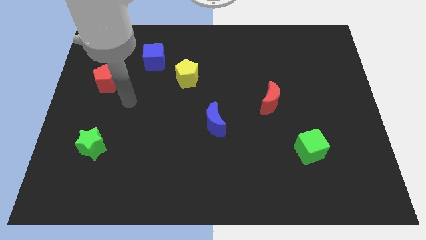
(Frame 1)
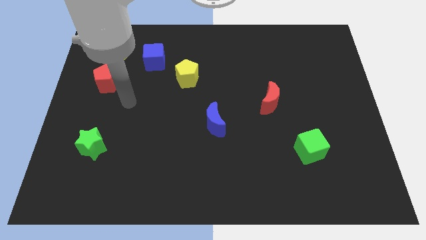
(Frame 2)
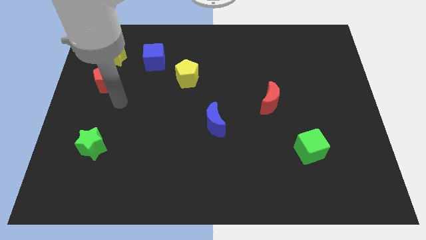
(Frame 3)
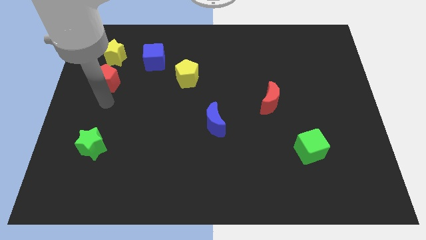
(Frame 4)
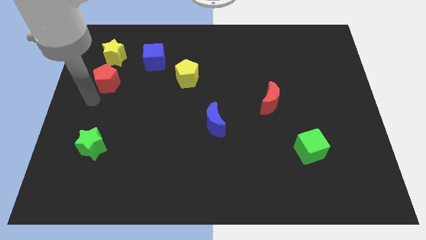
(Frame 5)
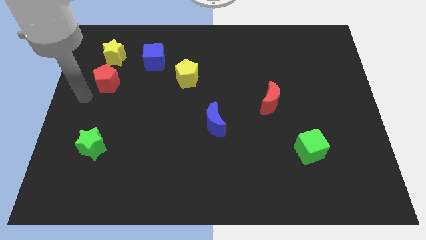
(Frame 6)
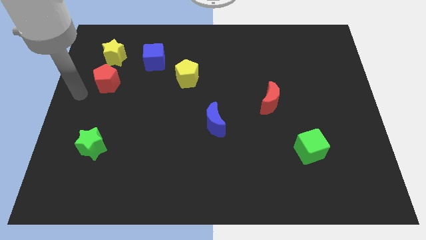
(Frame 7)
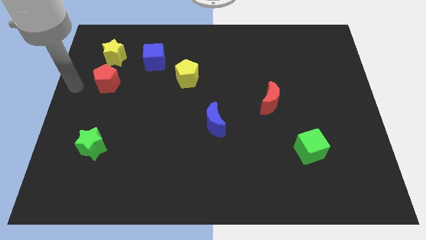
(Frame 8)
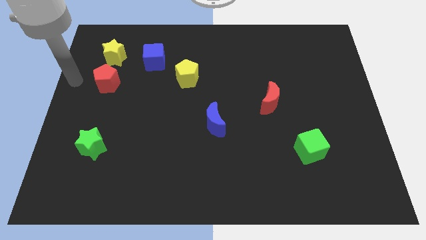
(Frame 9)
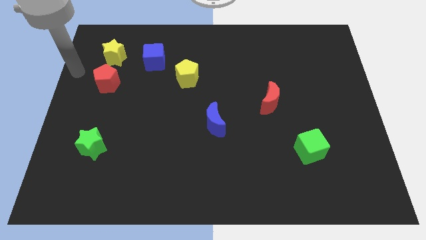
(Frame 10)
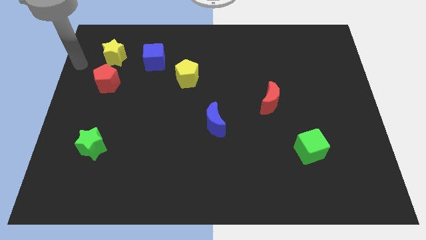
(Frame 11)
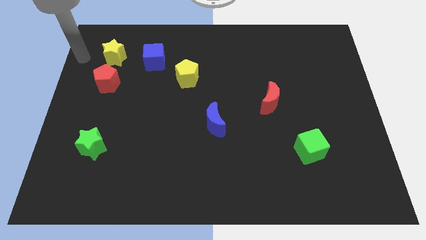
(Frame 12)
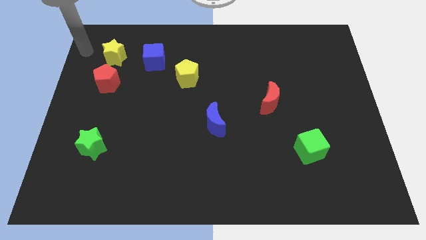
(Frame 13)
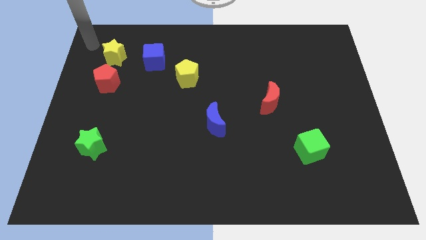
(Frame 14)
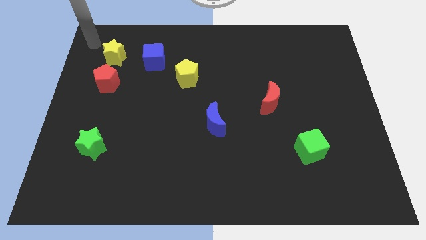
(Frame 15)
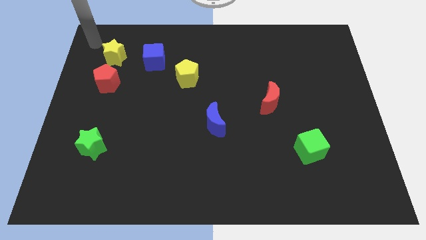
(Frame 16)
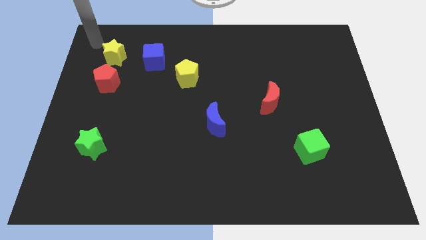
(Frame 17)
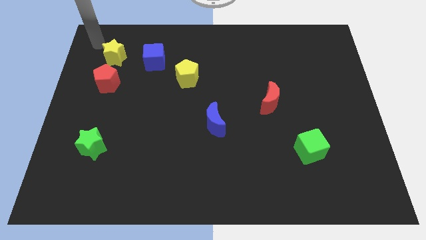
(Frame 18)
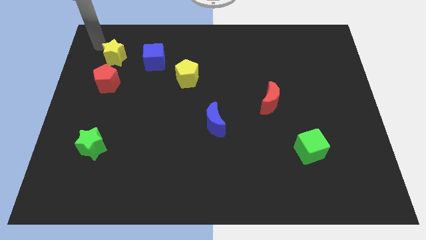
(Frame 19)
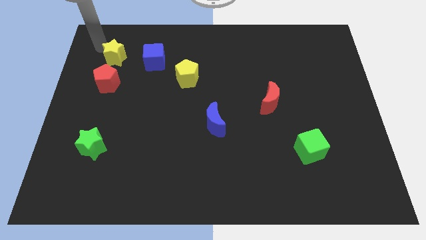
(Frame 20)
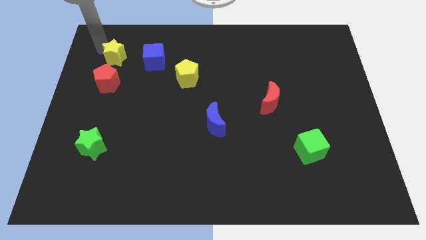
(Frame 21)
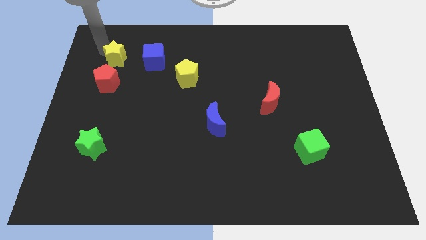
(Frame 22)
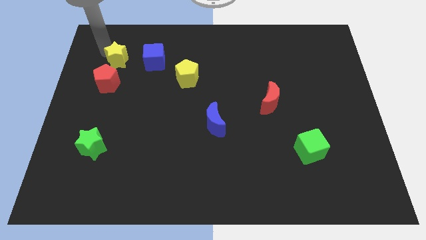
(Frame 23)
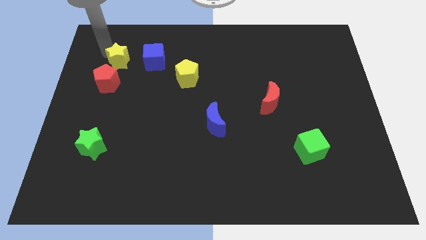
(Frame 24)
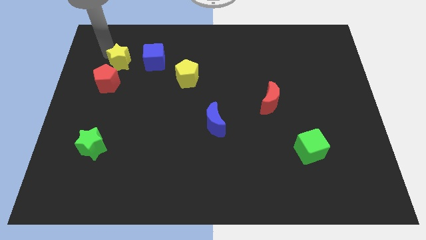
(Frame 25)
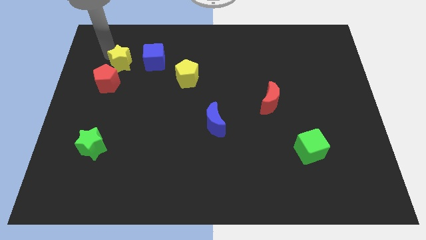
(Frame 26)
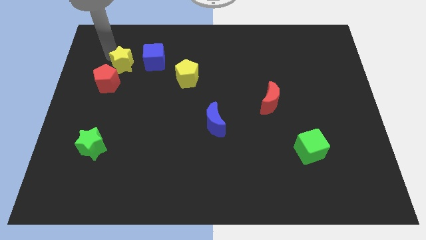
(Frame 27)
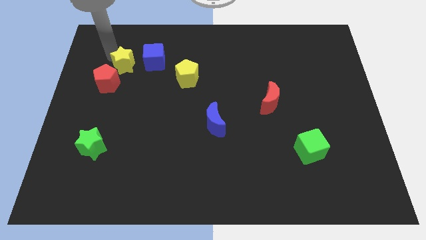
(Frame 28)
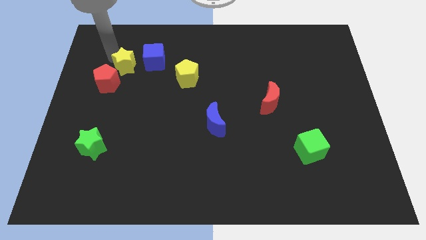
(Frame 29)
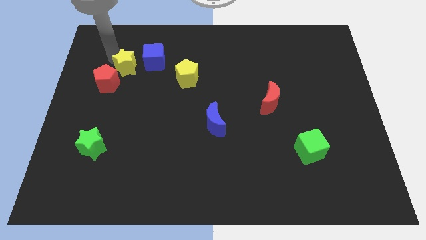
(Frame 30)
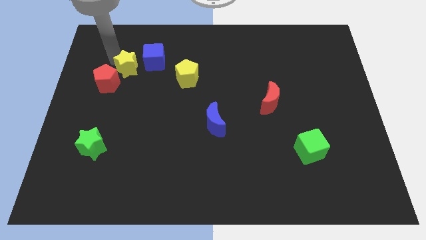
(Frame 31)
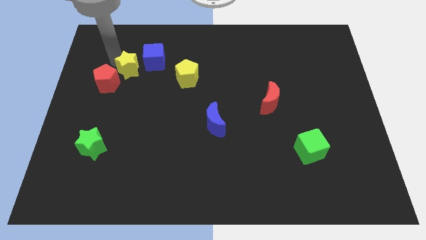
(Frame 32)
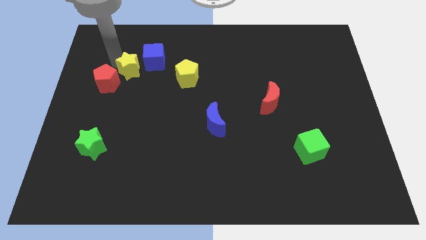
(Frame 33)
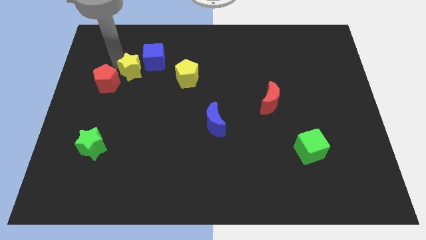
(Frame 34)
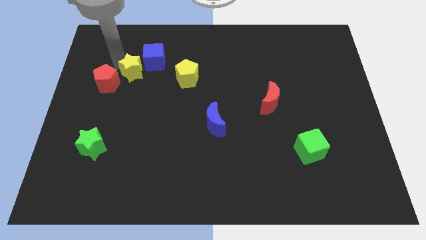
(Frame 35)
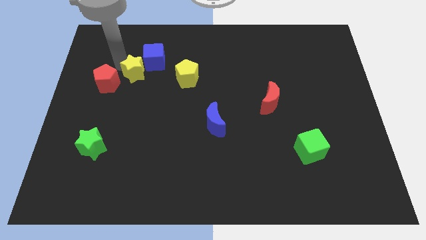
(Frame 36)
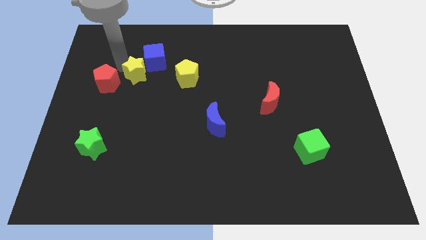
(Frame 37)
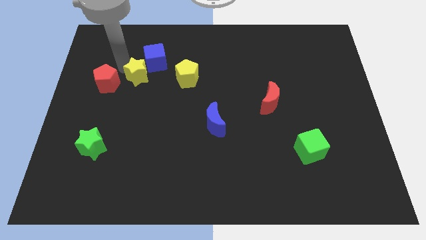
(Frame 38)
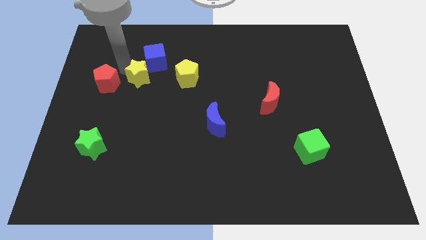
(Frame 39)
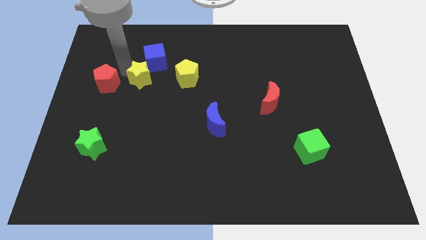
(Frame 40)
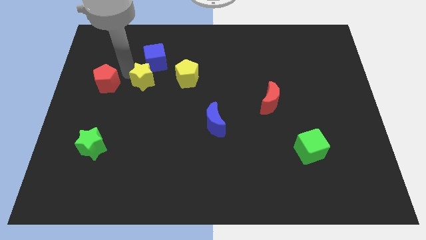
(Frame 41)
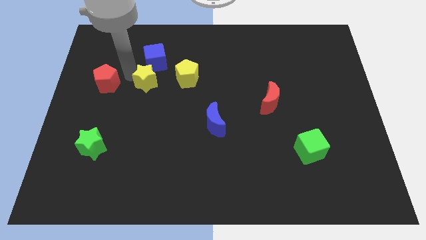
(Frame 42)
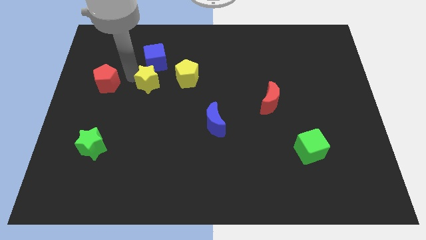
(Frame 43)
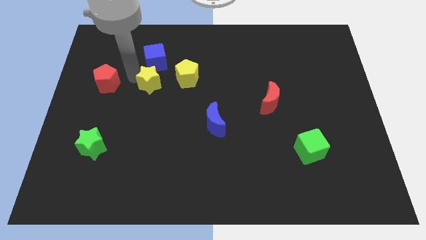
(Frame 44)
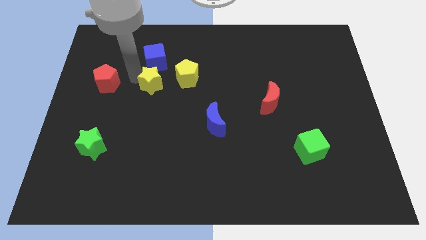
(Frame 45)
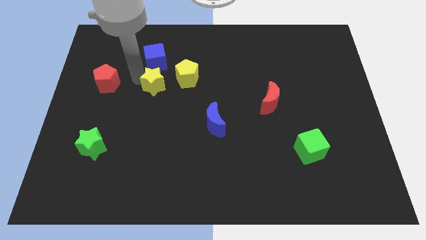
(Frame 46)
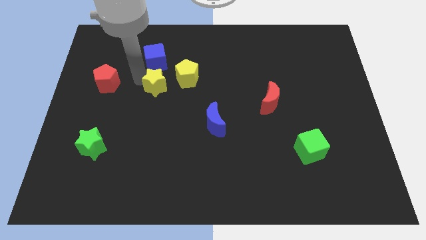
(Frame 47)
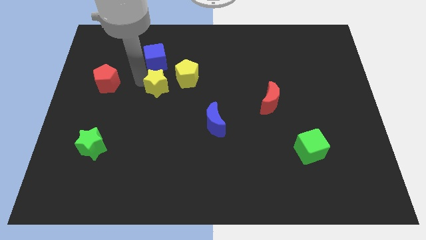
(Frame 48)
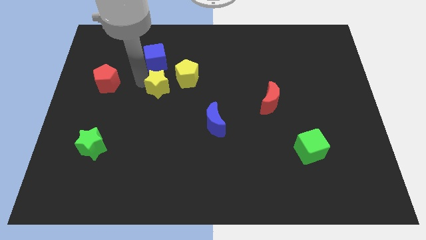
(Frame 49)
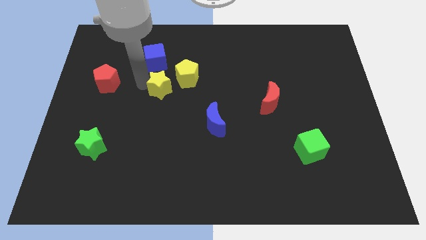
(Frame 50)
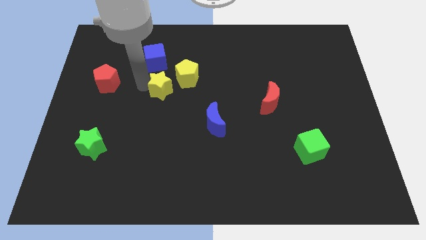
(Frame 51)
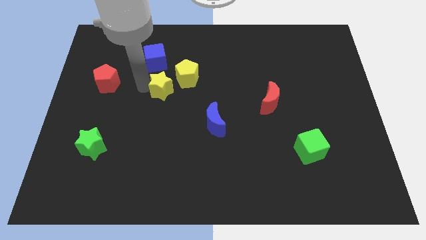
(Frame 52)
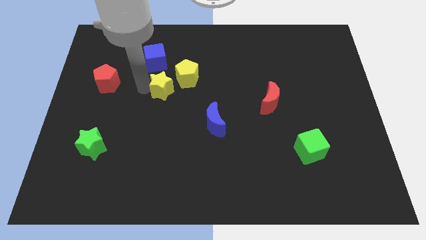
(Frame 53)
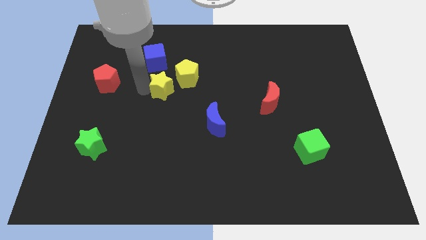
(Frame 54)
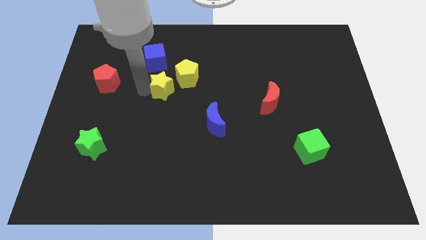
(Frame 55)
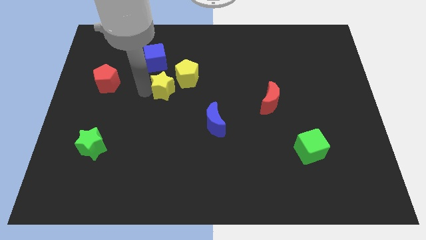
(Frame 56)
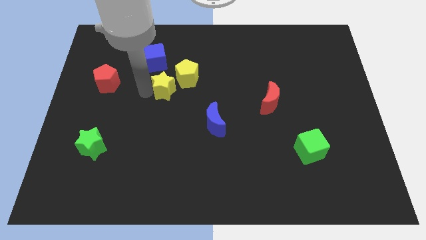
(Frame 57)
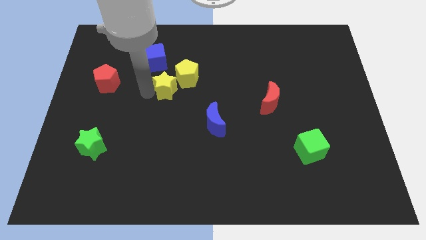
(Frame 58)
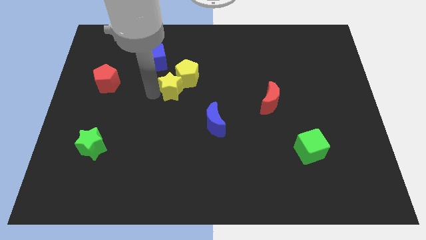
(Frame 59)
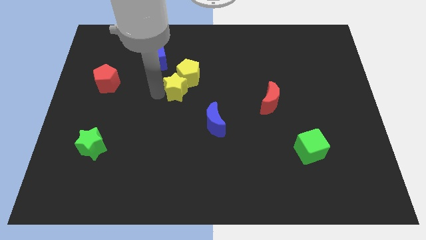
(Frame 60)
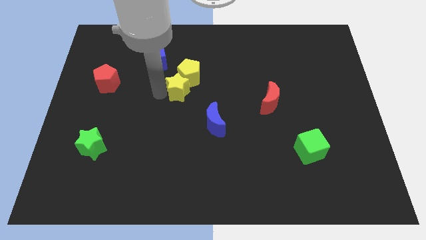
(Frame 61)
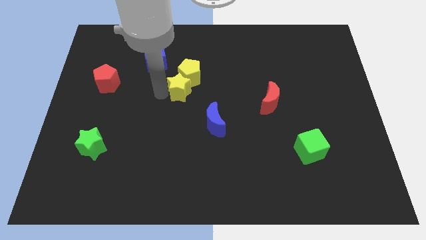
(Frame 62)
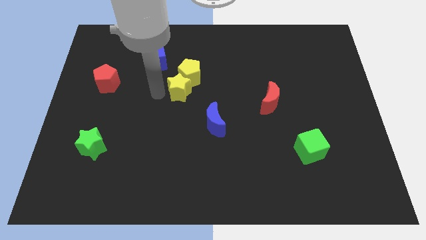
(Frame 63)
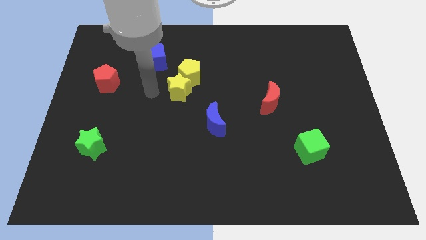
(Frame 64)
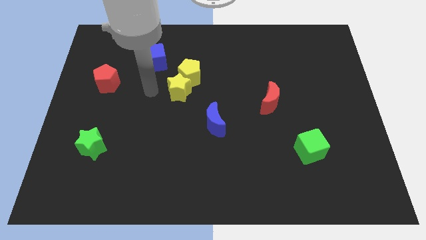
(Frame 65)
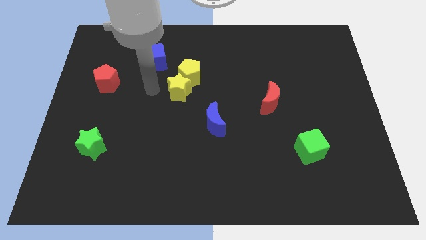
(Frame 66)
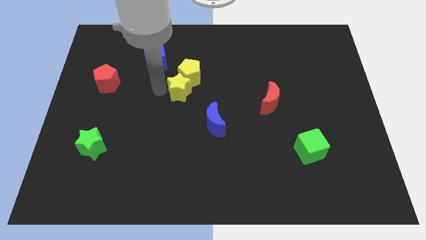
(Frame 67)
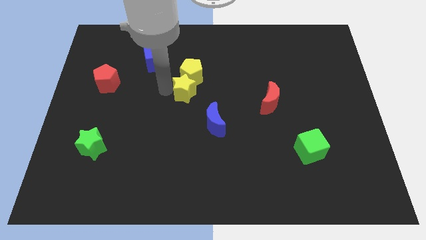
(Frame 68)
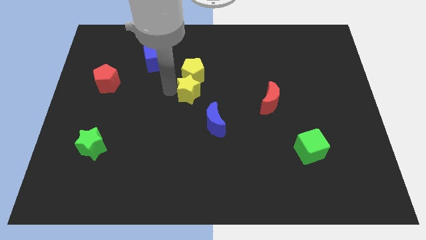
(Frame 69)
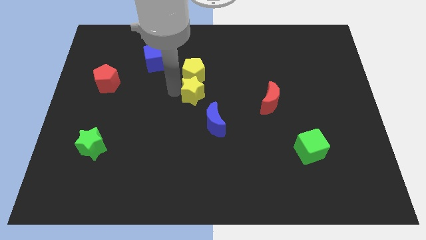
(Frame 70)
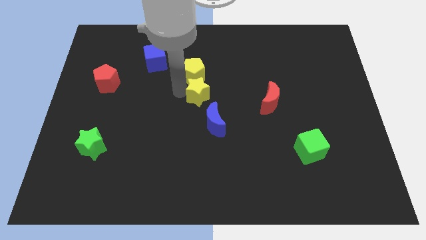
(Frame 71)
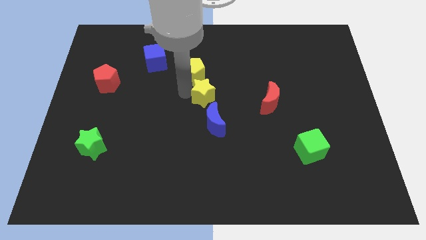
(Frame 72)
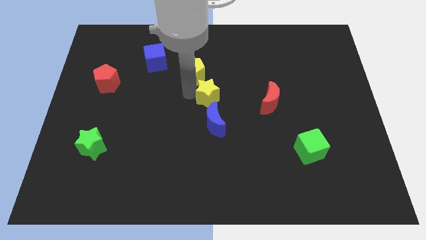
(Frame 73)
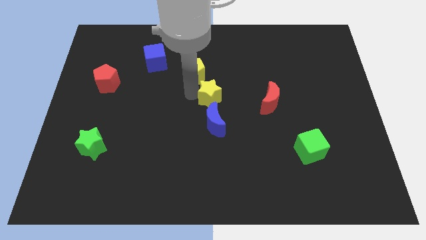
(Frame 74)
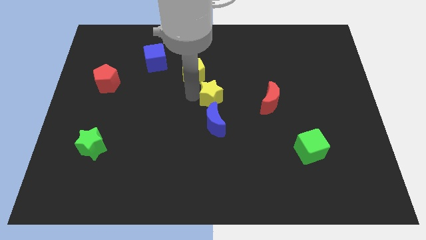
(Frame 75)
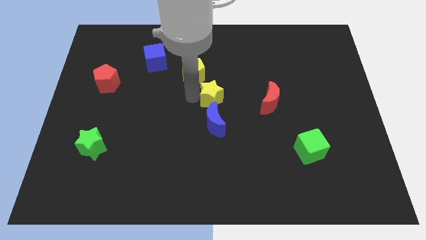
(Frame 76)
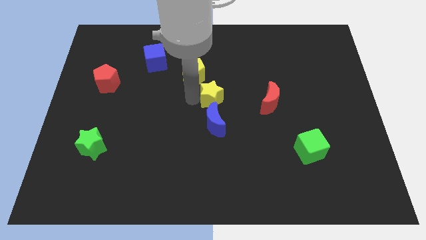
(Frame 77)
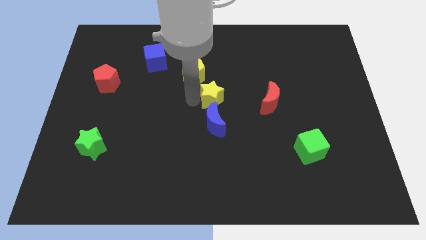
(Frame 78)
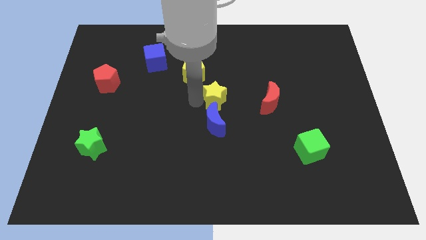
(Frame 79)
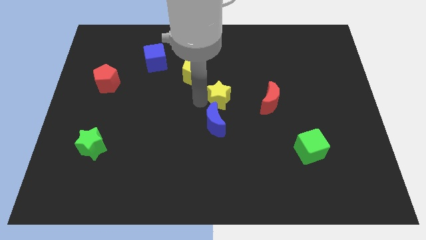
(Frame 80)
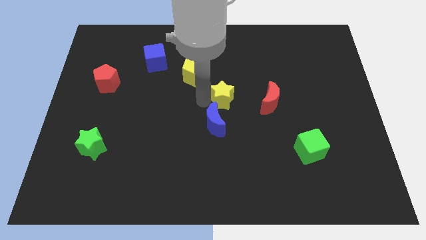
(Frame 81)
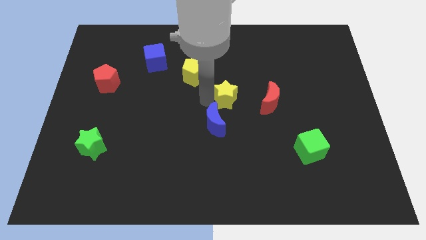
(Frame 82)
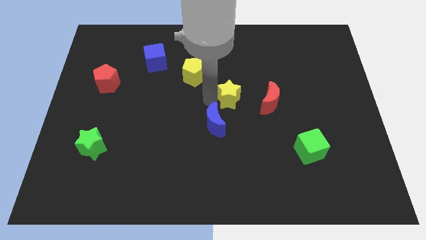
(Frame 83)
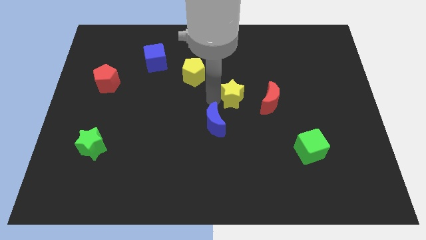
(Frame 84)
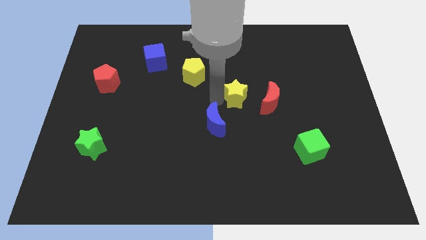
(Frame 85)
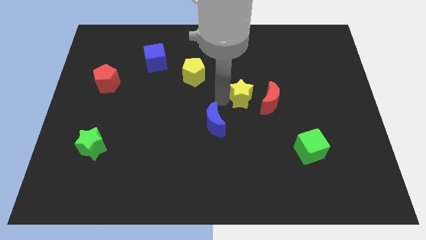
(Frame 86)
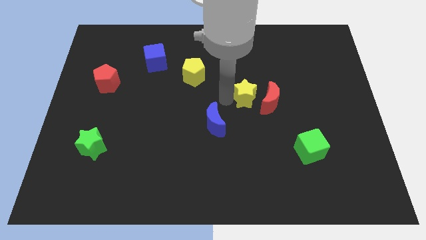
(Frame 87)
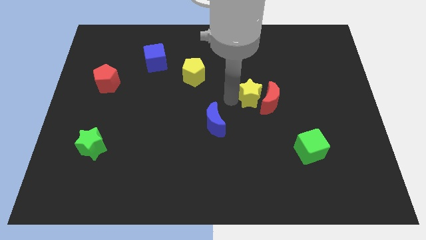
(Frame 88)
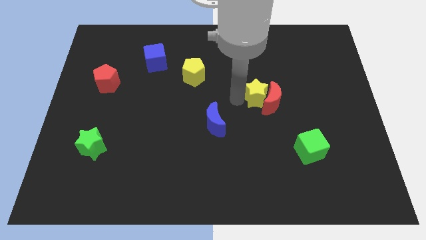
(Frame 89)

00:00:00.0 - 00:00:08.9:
move the yellow star to the red moon
